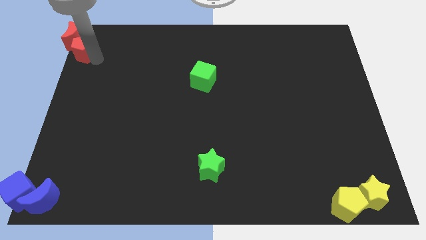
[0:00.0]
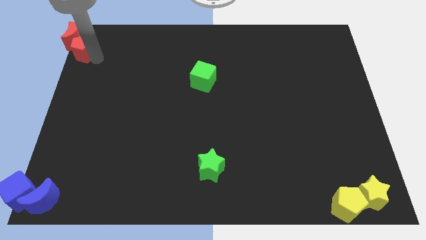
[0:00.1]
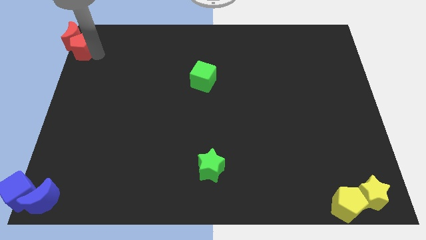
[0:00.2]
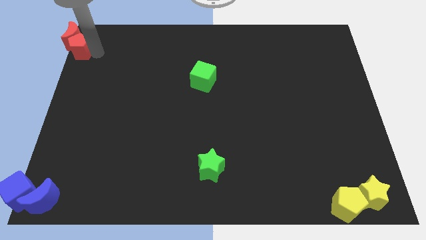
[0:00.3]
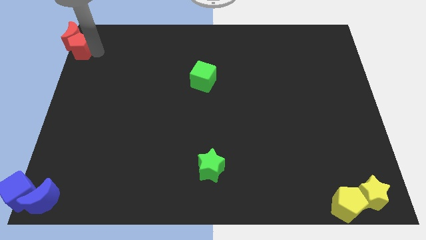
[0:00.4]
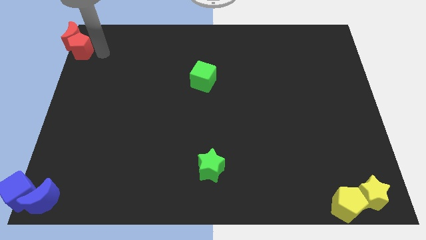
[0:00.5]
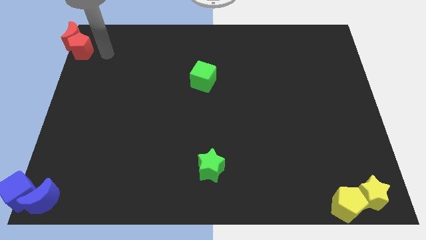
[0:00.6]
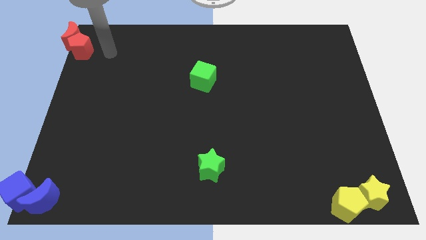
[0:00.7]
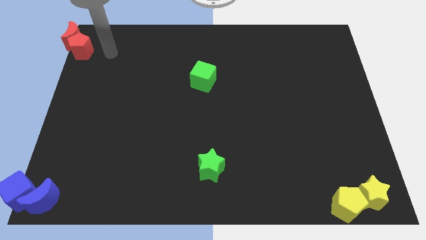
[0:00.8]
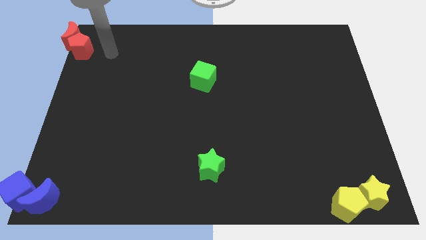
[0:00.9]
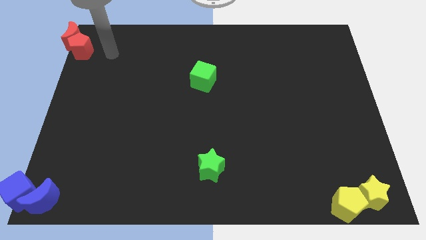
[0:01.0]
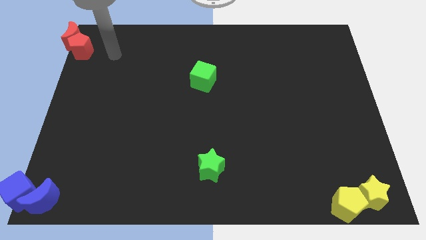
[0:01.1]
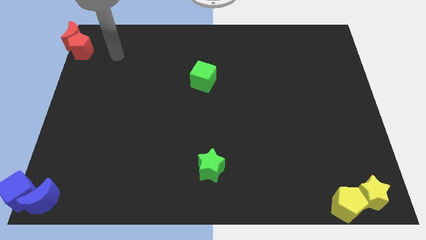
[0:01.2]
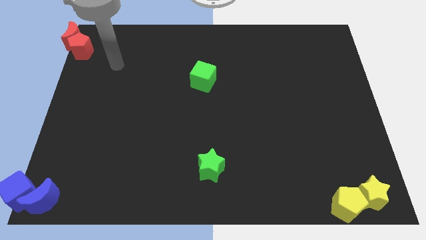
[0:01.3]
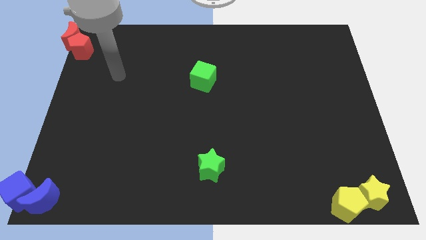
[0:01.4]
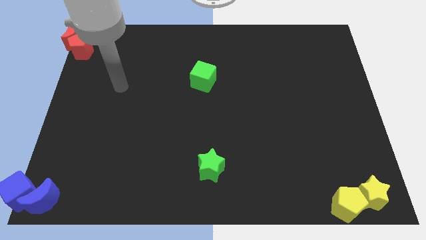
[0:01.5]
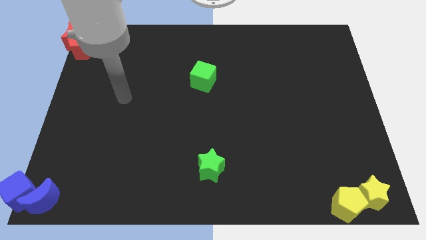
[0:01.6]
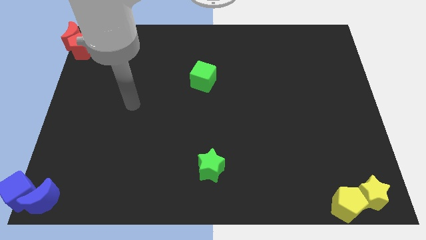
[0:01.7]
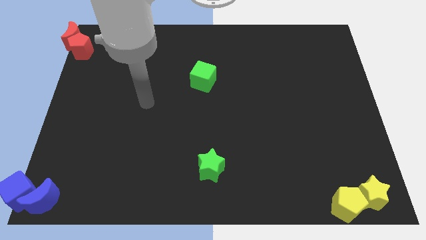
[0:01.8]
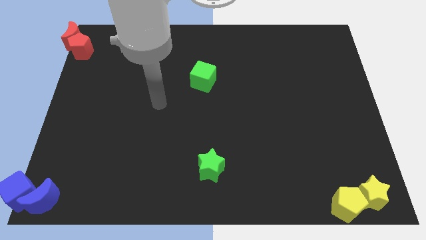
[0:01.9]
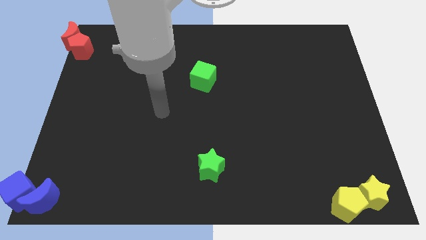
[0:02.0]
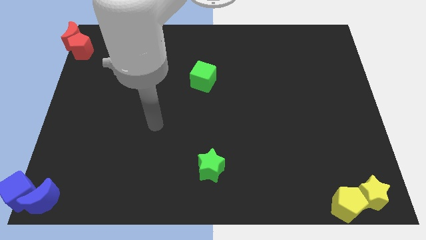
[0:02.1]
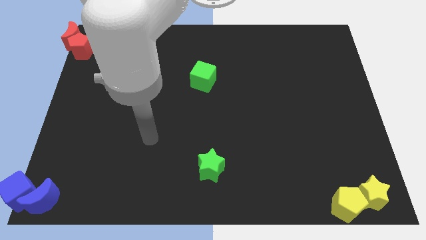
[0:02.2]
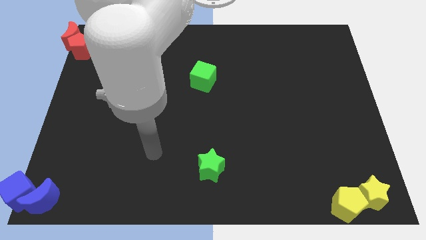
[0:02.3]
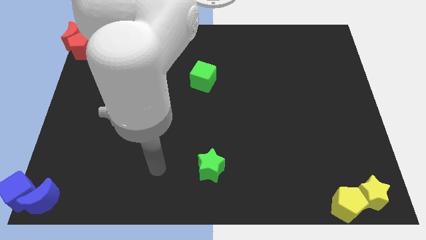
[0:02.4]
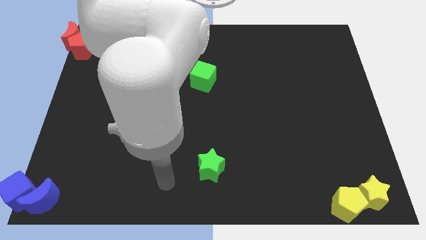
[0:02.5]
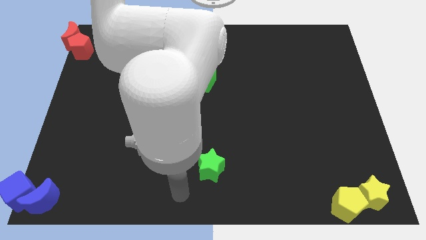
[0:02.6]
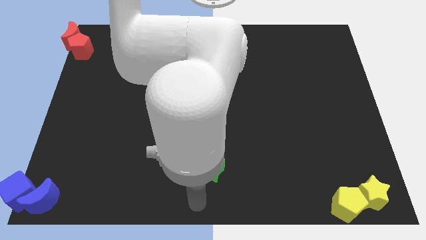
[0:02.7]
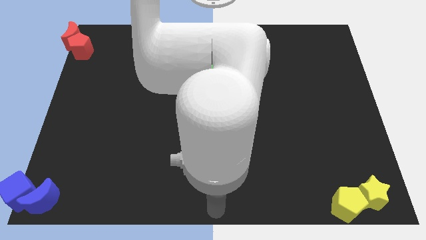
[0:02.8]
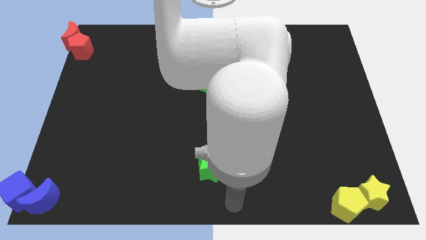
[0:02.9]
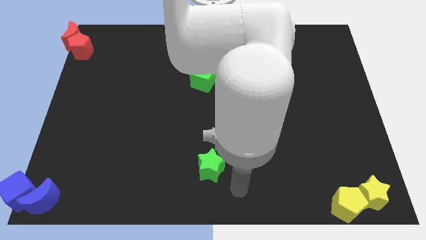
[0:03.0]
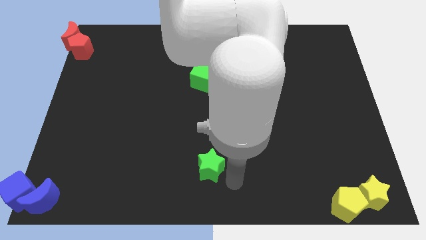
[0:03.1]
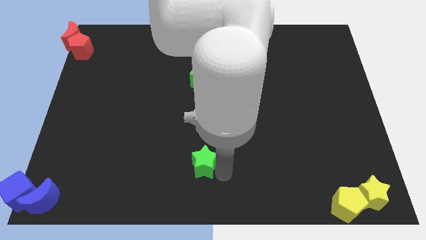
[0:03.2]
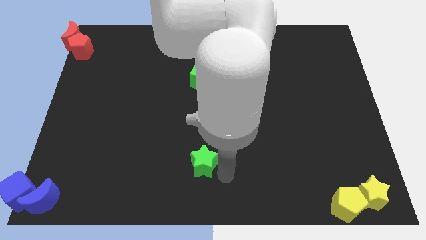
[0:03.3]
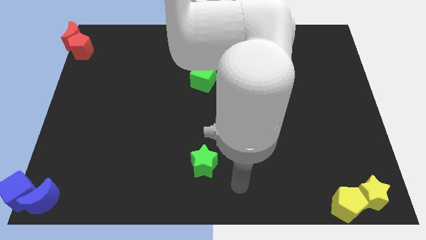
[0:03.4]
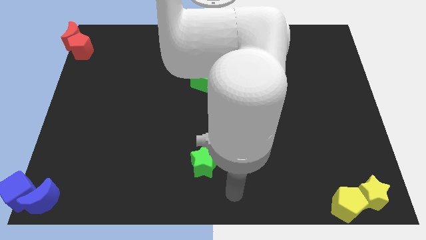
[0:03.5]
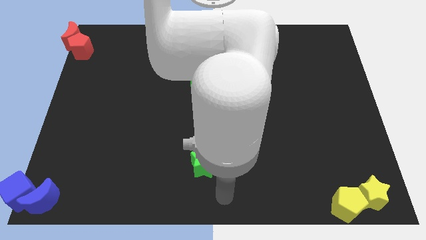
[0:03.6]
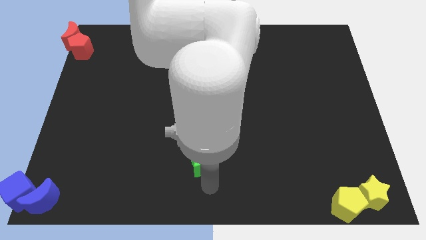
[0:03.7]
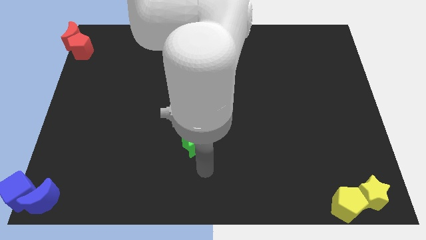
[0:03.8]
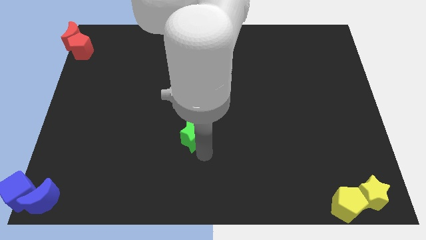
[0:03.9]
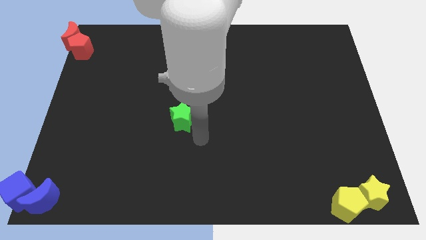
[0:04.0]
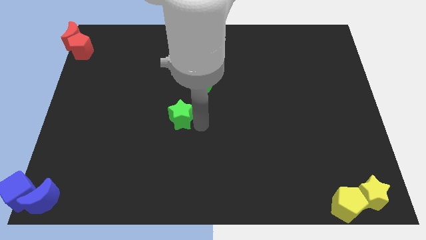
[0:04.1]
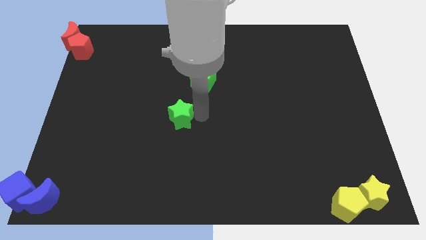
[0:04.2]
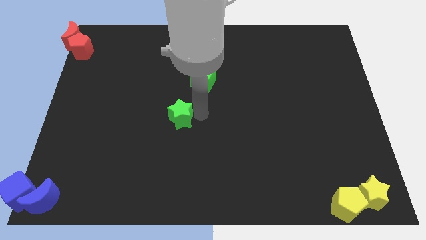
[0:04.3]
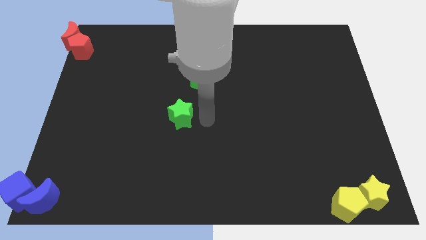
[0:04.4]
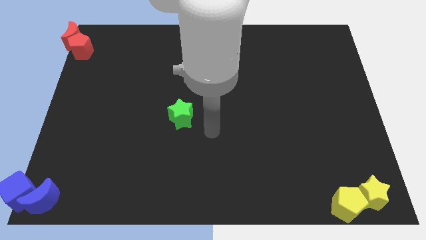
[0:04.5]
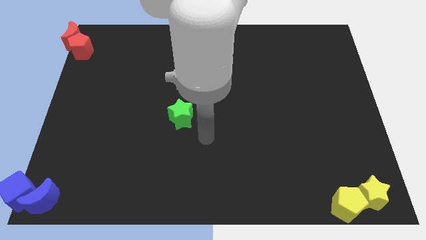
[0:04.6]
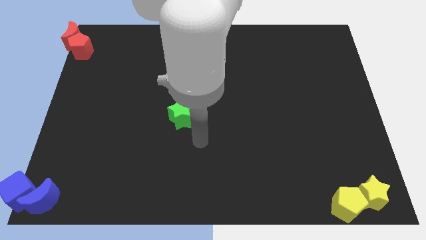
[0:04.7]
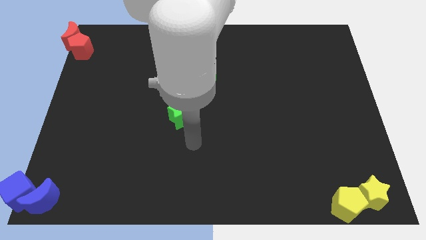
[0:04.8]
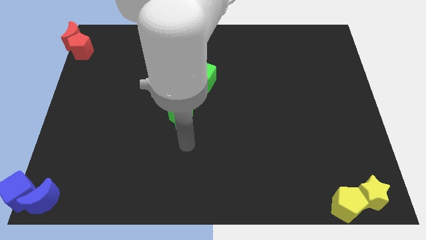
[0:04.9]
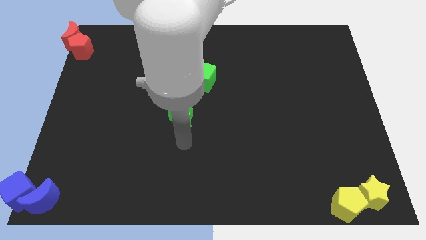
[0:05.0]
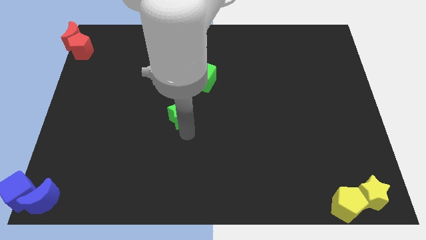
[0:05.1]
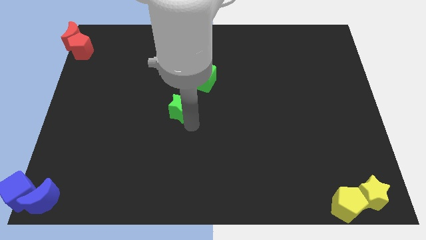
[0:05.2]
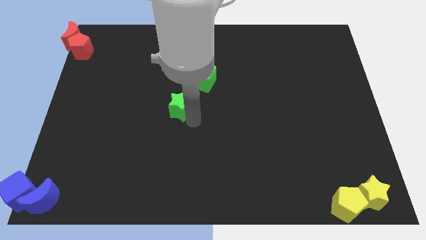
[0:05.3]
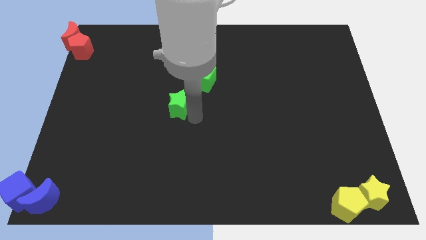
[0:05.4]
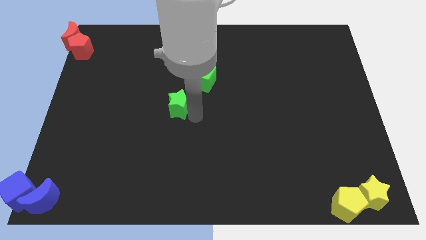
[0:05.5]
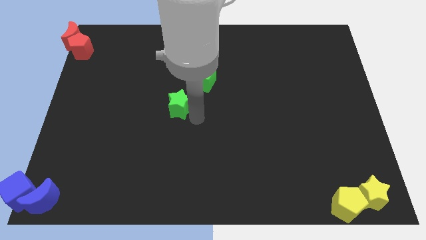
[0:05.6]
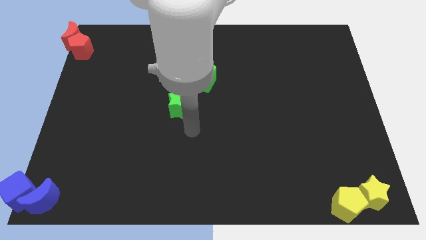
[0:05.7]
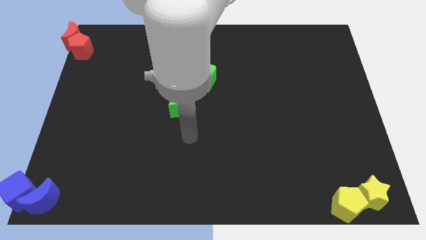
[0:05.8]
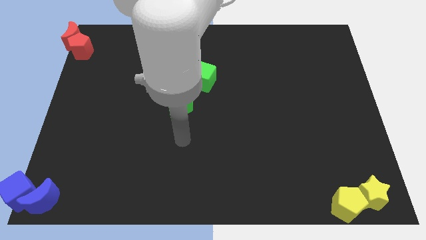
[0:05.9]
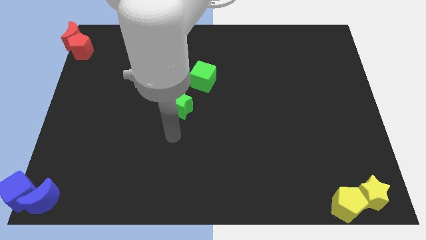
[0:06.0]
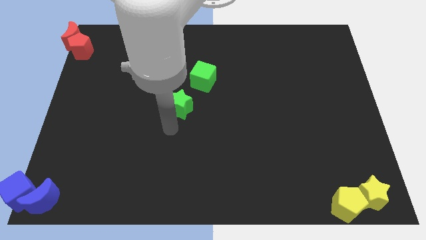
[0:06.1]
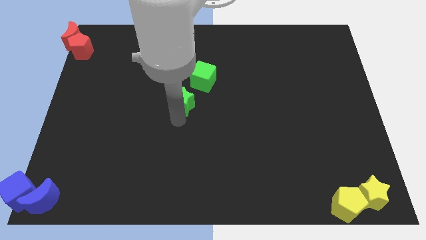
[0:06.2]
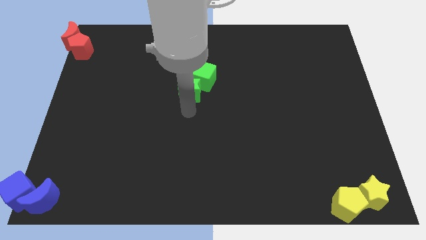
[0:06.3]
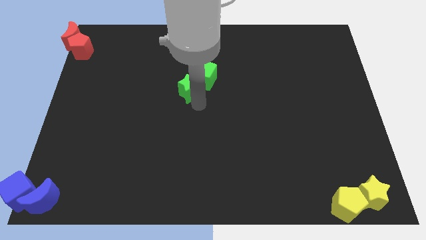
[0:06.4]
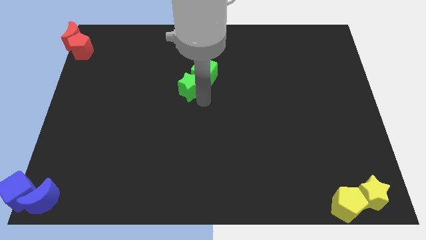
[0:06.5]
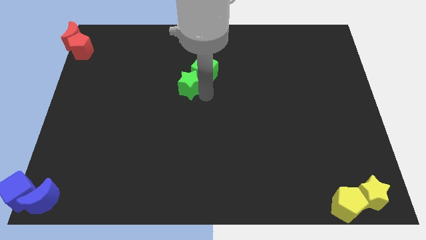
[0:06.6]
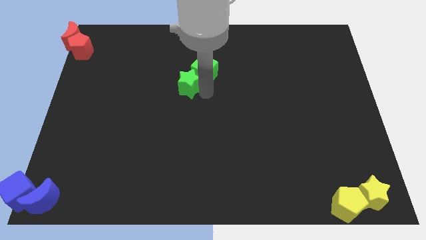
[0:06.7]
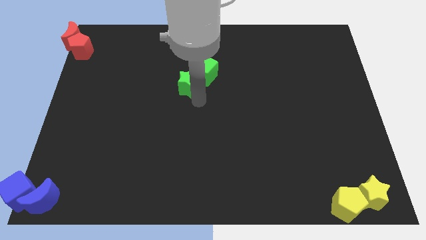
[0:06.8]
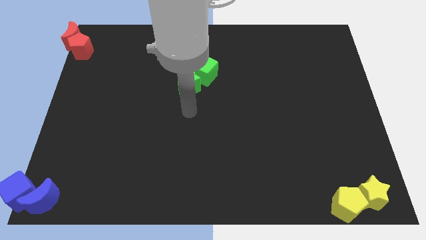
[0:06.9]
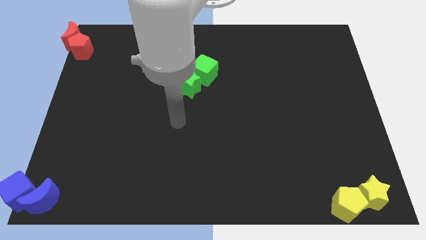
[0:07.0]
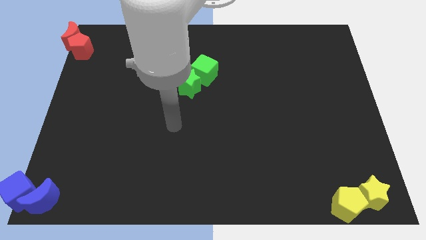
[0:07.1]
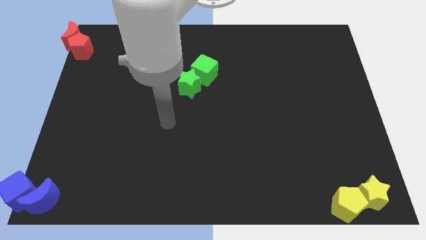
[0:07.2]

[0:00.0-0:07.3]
push the green star into the green cube

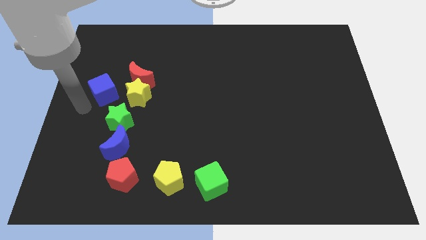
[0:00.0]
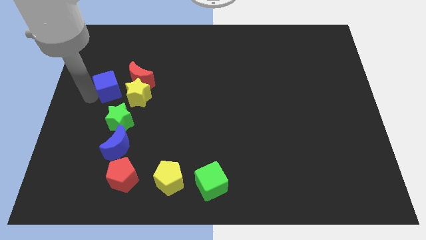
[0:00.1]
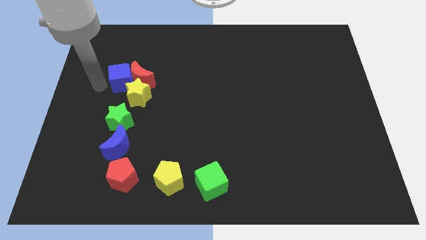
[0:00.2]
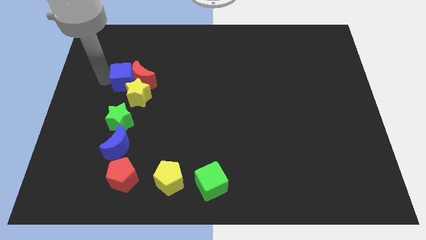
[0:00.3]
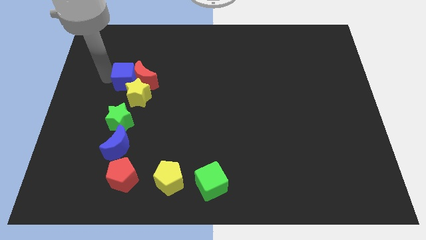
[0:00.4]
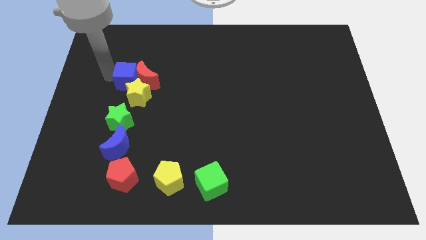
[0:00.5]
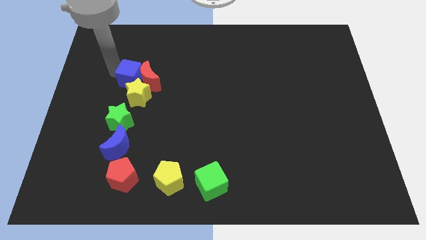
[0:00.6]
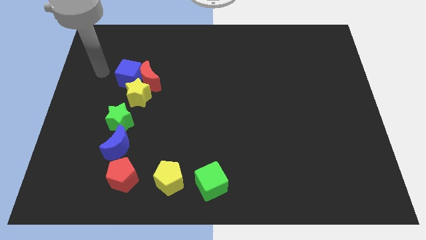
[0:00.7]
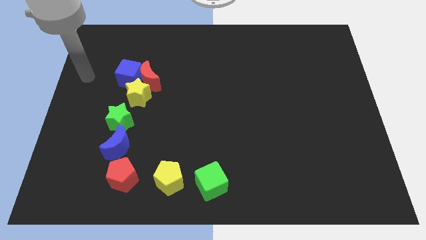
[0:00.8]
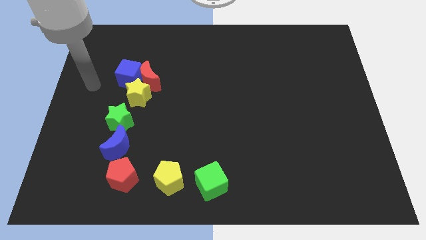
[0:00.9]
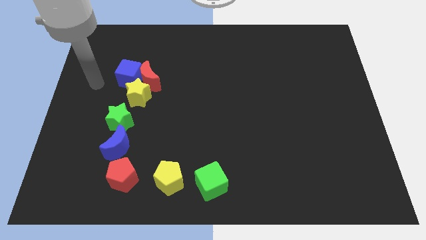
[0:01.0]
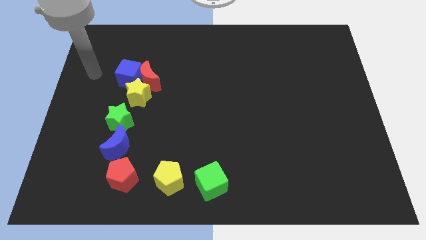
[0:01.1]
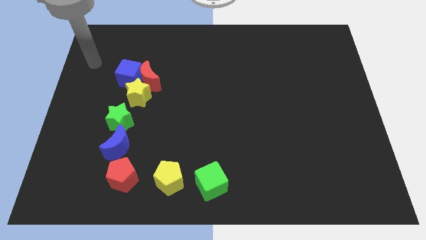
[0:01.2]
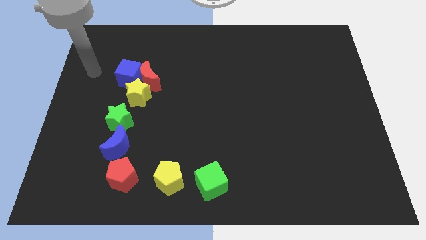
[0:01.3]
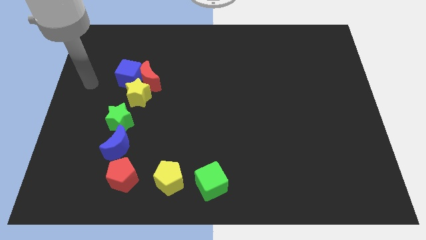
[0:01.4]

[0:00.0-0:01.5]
push the blue cube into the red moon

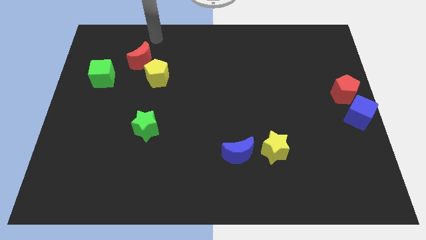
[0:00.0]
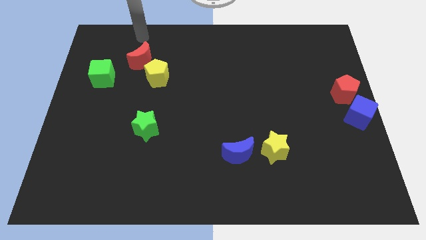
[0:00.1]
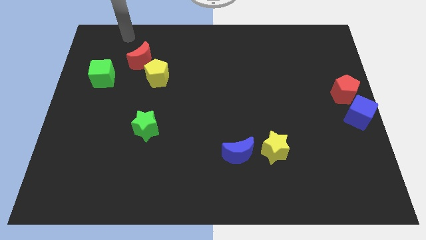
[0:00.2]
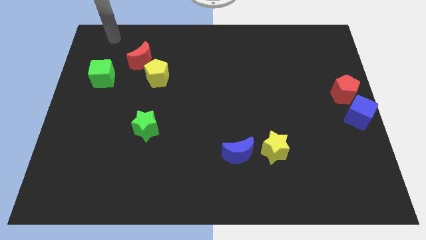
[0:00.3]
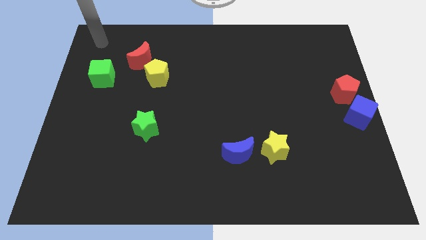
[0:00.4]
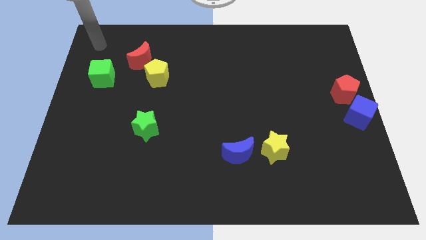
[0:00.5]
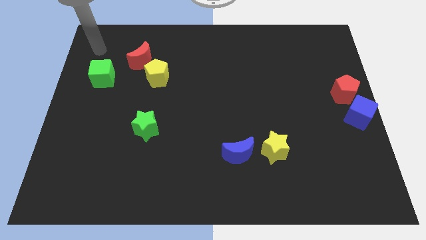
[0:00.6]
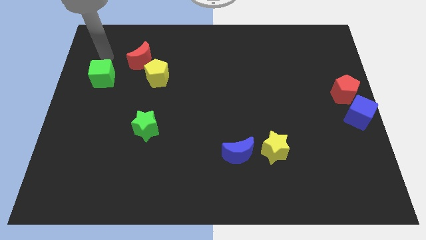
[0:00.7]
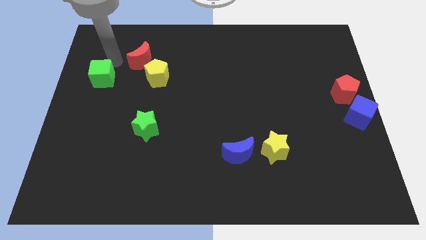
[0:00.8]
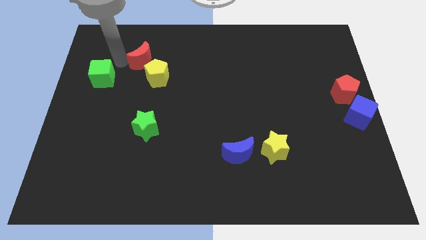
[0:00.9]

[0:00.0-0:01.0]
move your arm to the left of the red crescent
